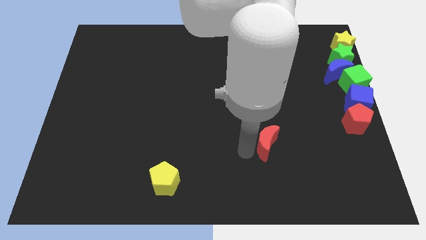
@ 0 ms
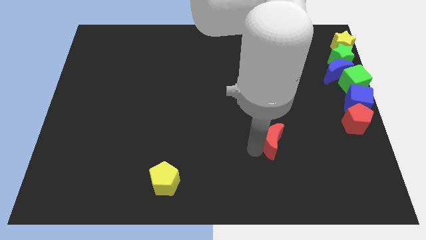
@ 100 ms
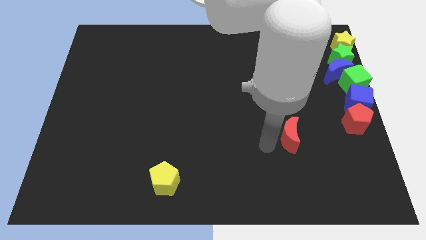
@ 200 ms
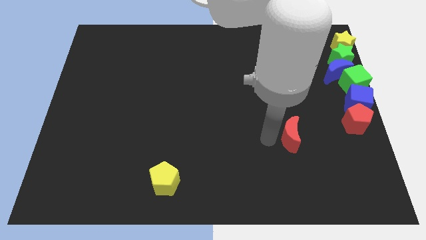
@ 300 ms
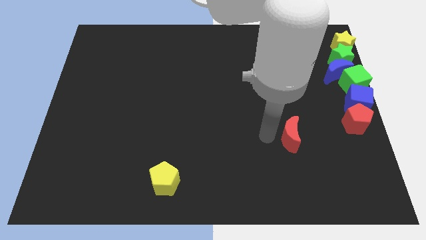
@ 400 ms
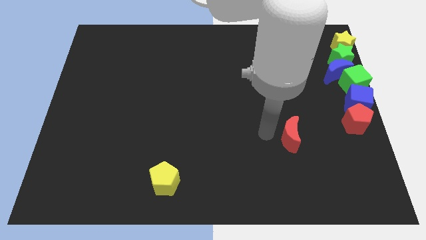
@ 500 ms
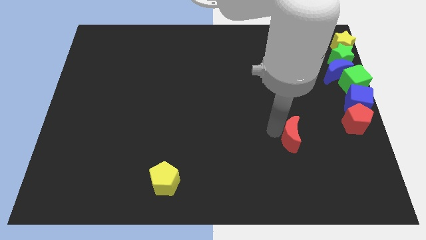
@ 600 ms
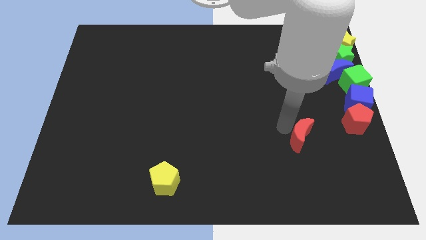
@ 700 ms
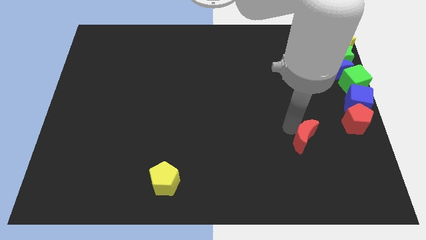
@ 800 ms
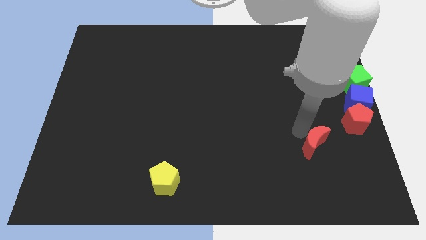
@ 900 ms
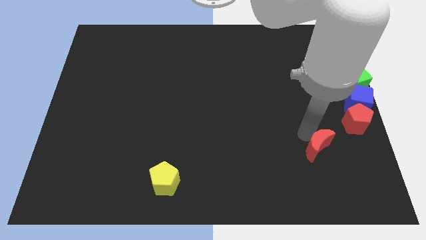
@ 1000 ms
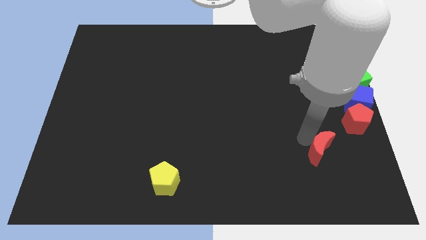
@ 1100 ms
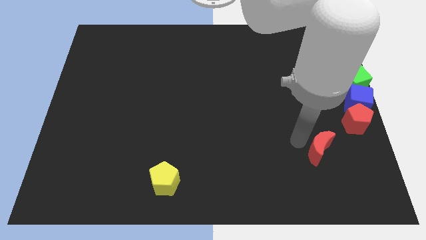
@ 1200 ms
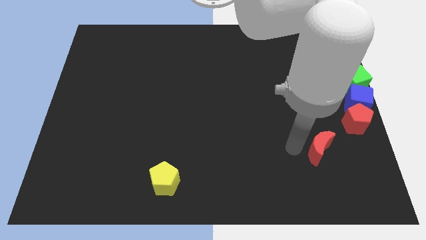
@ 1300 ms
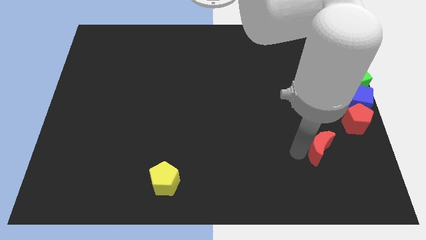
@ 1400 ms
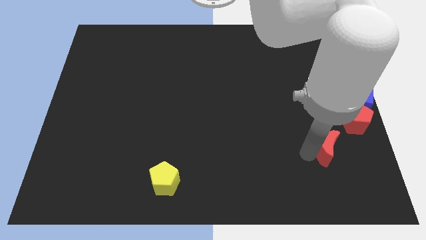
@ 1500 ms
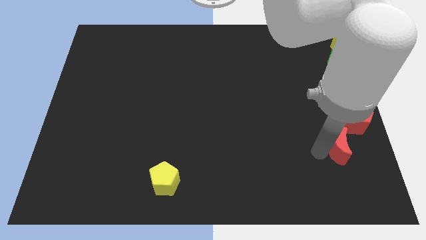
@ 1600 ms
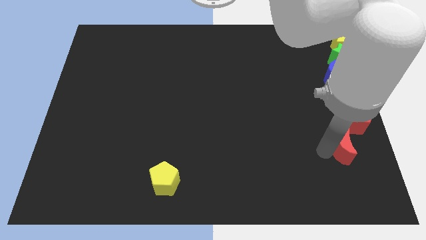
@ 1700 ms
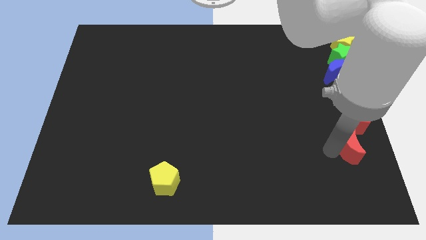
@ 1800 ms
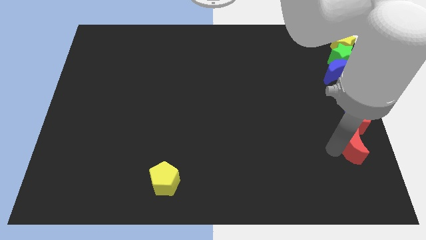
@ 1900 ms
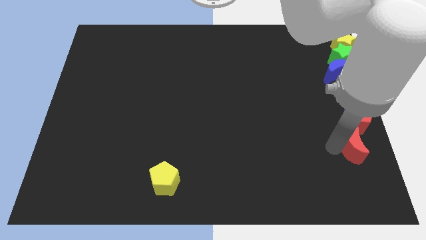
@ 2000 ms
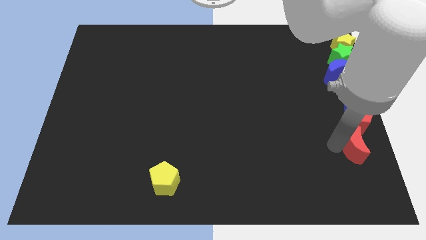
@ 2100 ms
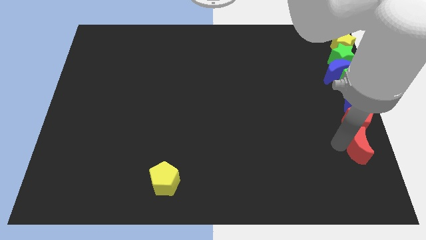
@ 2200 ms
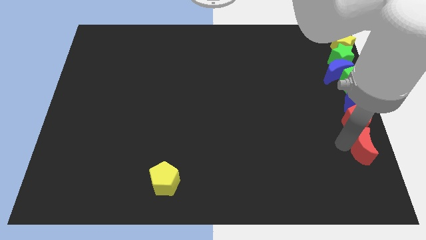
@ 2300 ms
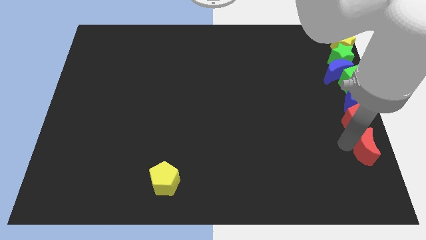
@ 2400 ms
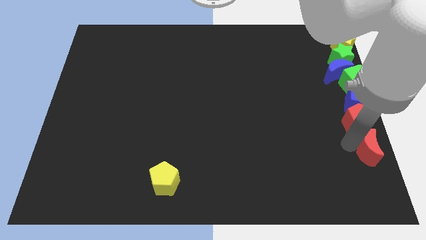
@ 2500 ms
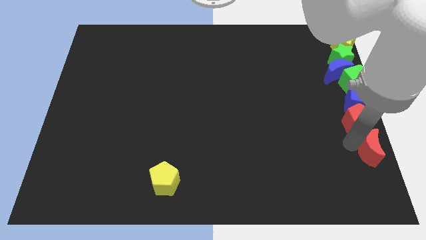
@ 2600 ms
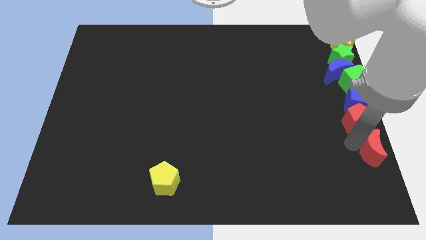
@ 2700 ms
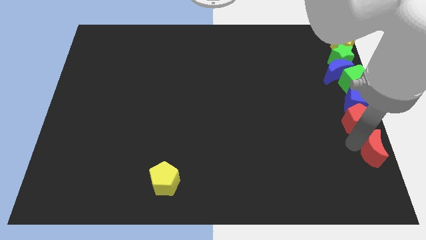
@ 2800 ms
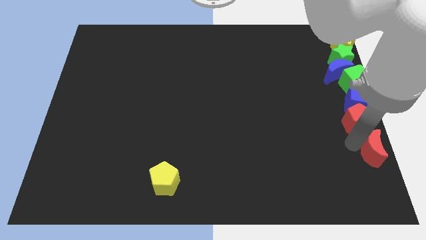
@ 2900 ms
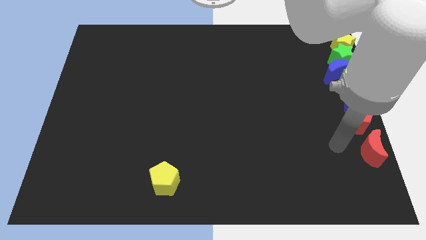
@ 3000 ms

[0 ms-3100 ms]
place red crescent below to the red pentagon

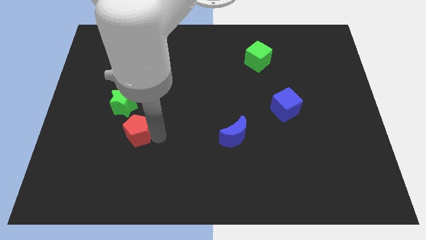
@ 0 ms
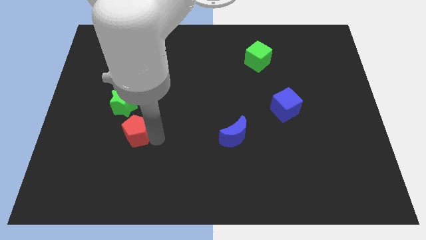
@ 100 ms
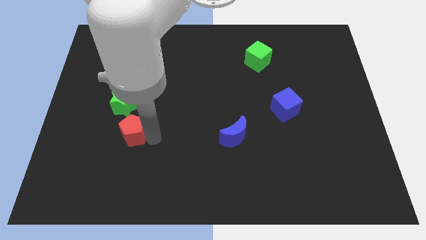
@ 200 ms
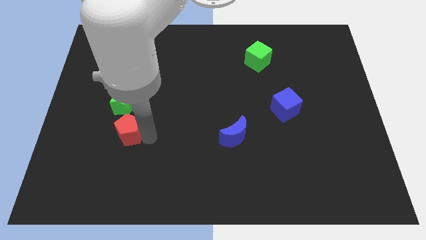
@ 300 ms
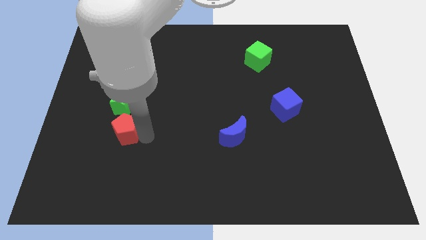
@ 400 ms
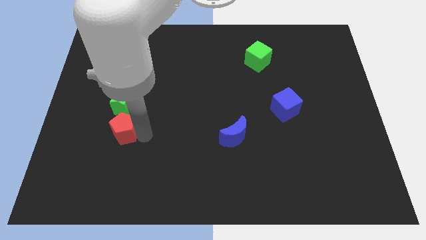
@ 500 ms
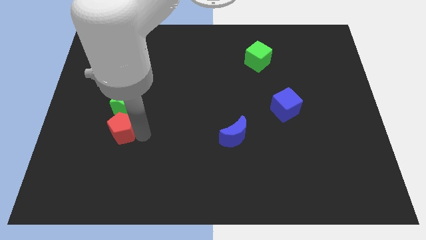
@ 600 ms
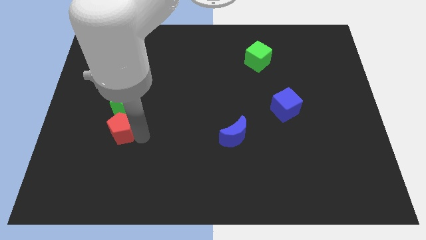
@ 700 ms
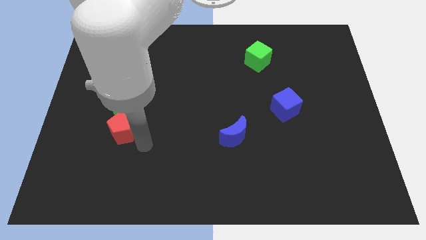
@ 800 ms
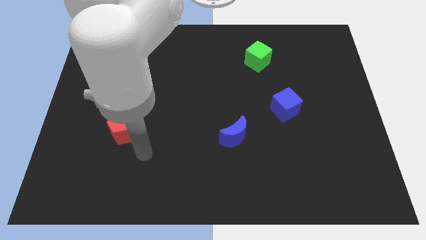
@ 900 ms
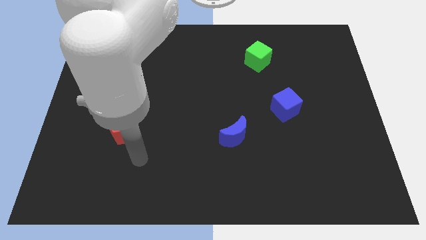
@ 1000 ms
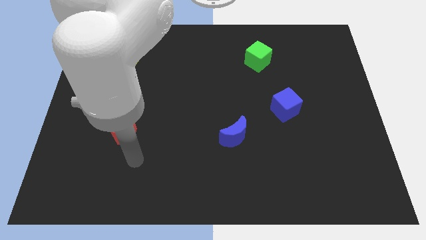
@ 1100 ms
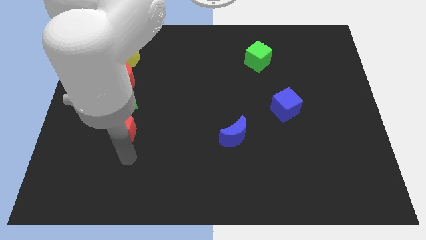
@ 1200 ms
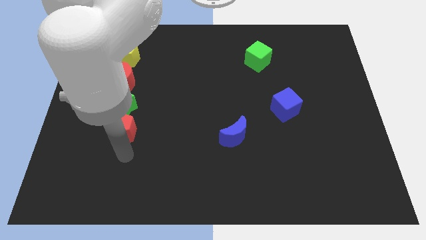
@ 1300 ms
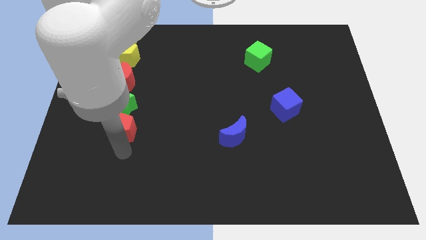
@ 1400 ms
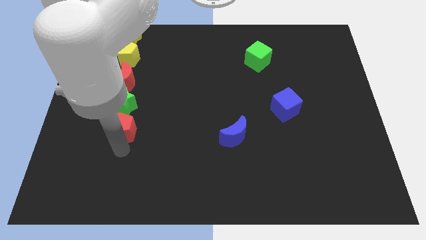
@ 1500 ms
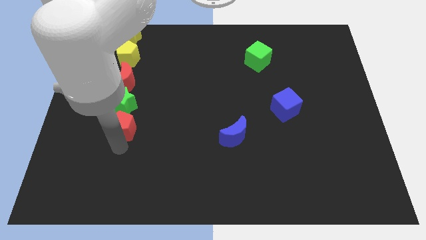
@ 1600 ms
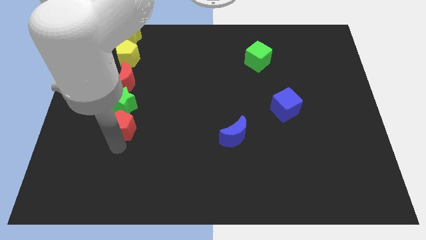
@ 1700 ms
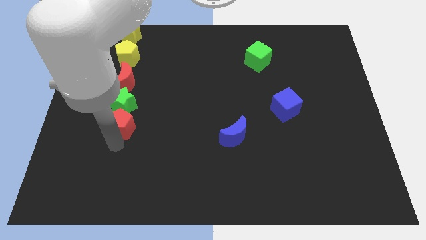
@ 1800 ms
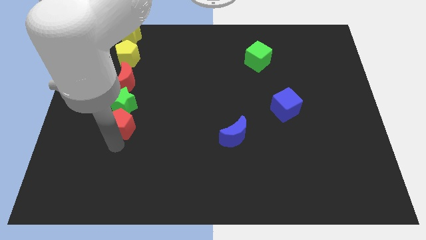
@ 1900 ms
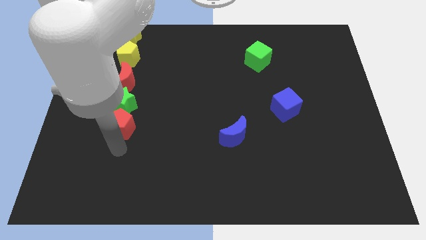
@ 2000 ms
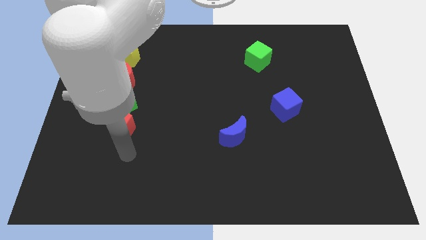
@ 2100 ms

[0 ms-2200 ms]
add red pentagon into green star

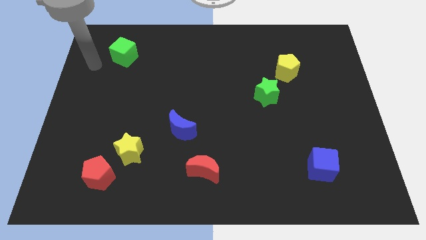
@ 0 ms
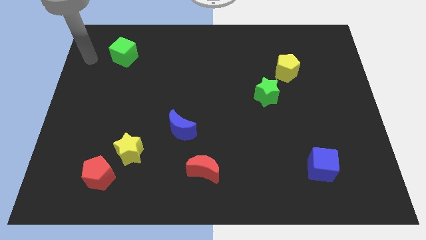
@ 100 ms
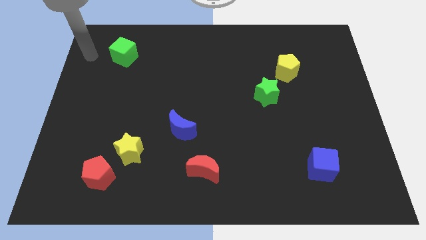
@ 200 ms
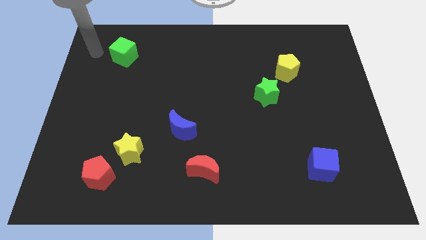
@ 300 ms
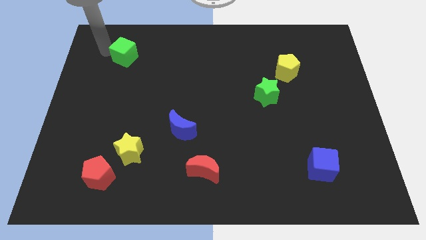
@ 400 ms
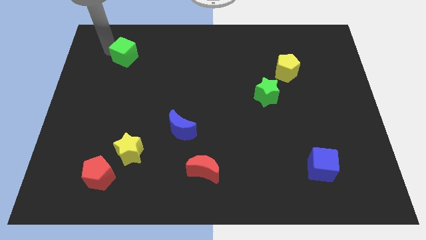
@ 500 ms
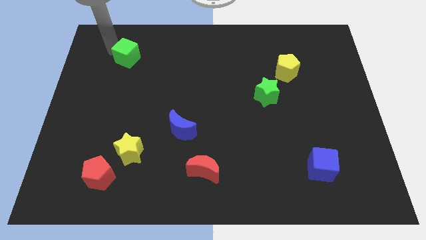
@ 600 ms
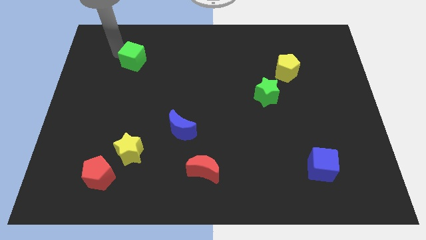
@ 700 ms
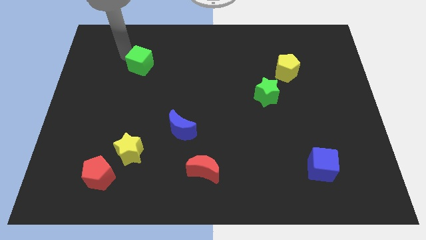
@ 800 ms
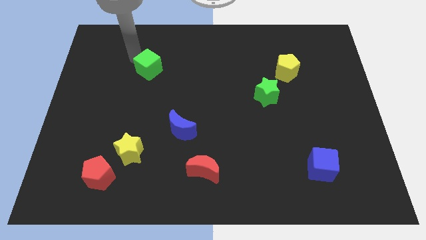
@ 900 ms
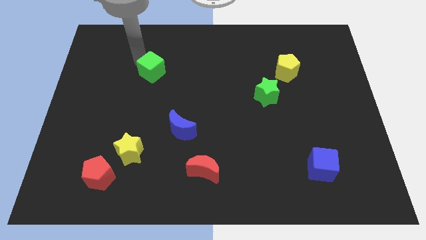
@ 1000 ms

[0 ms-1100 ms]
push green cube diagonally below

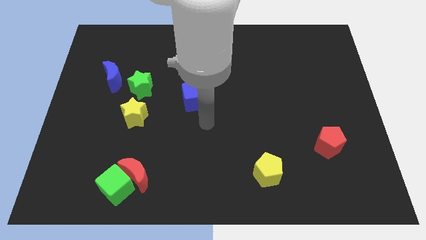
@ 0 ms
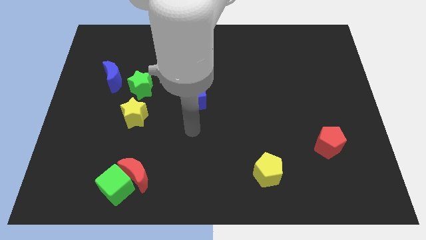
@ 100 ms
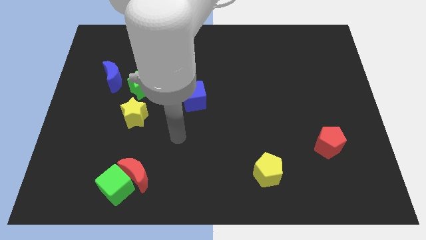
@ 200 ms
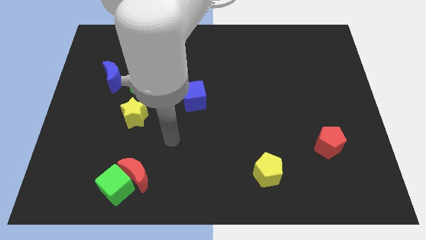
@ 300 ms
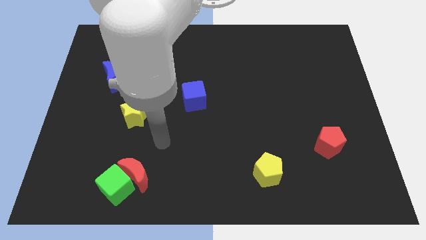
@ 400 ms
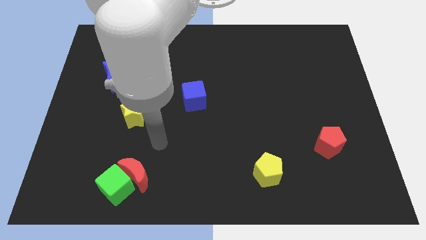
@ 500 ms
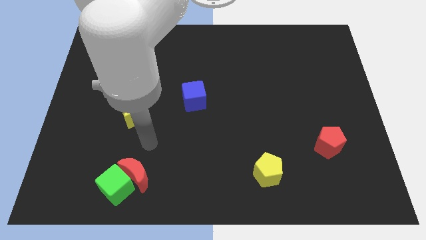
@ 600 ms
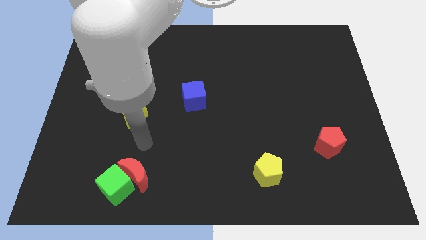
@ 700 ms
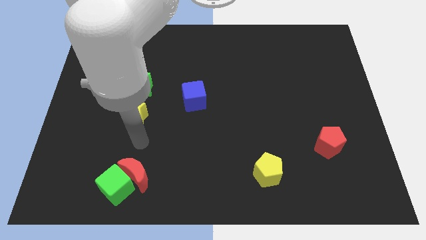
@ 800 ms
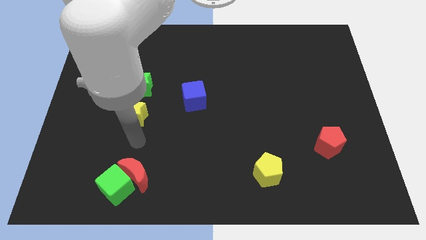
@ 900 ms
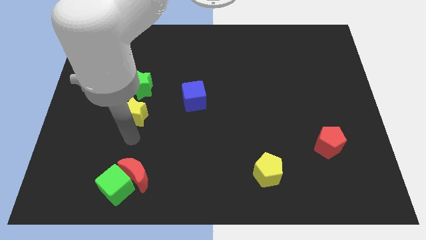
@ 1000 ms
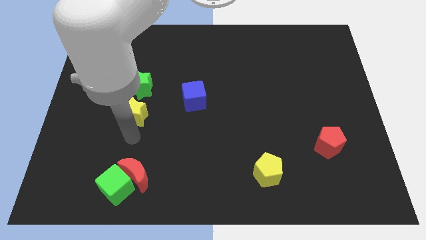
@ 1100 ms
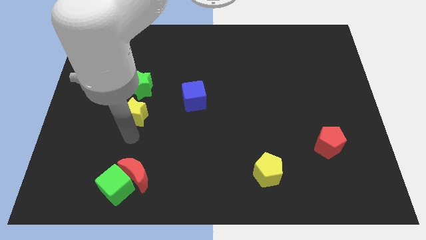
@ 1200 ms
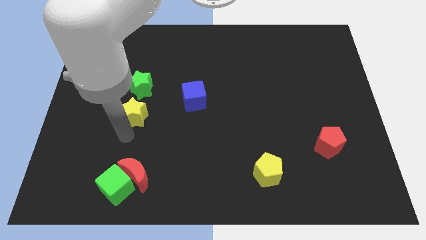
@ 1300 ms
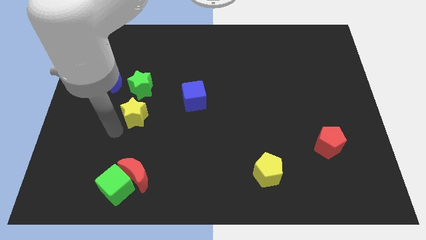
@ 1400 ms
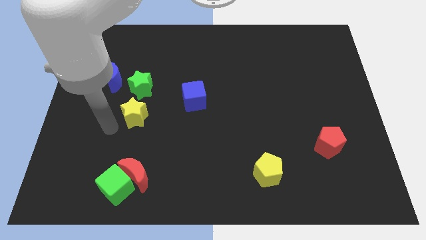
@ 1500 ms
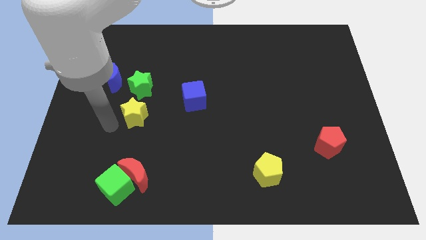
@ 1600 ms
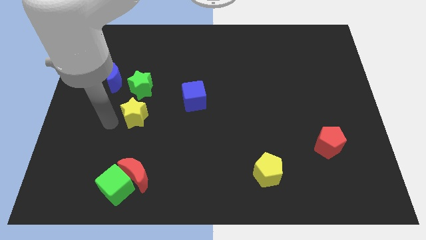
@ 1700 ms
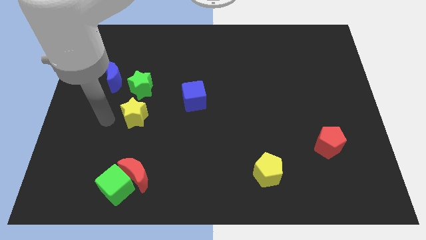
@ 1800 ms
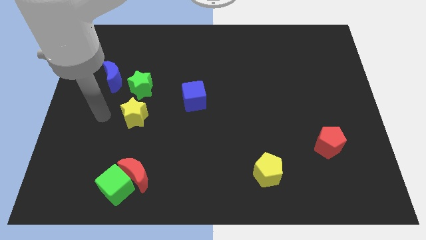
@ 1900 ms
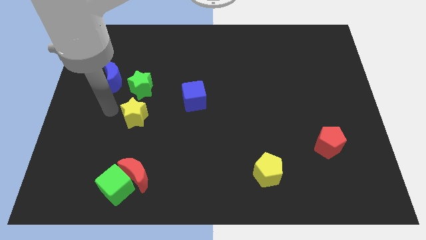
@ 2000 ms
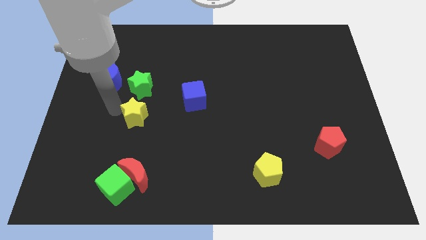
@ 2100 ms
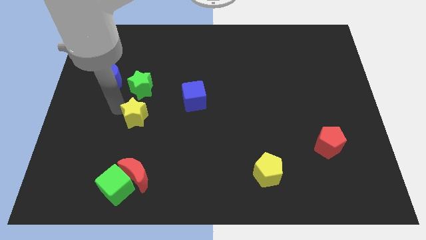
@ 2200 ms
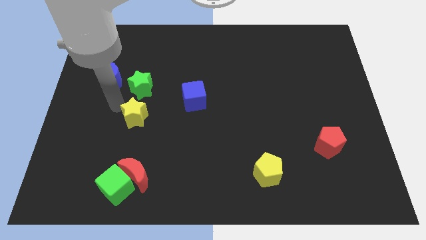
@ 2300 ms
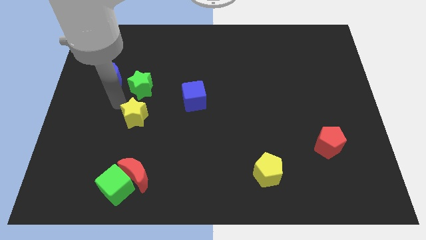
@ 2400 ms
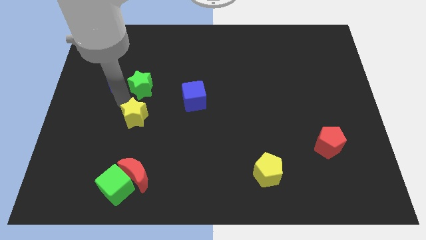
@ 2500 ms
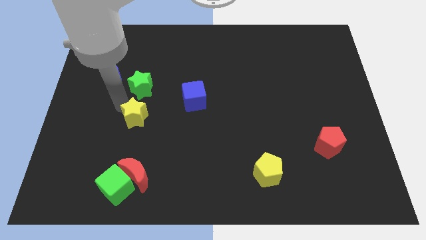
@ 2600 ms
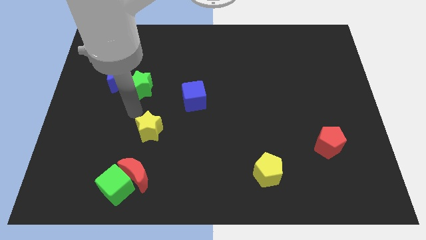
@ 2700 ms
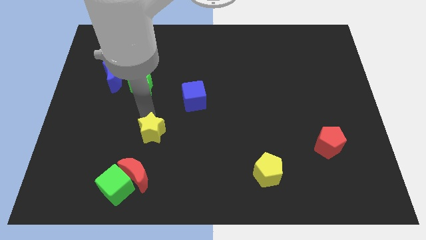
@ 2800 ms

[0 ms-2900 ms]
push yellow star below green star
